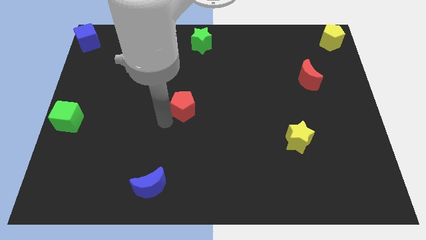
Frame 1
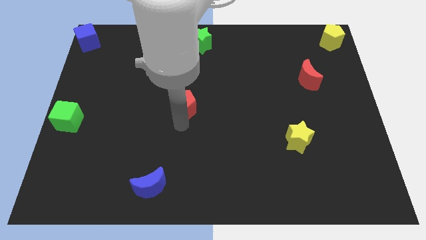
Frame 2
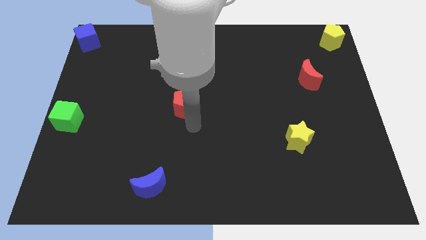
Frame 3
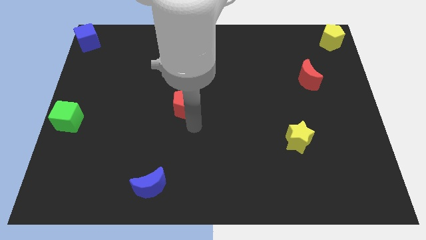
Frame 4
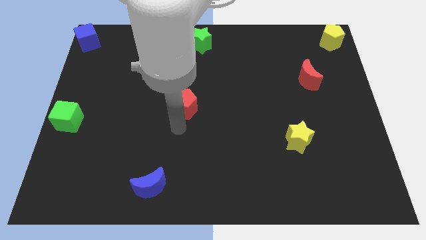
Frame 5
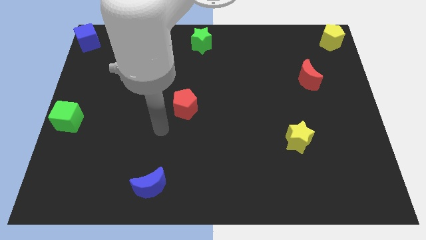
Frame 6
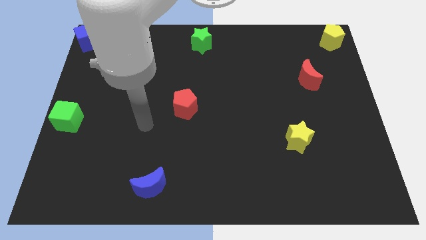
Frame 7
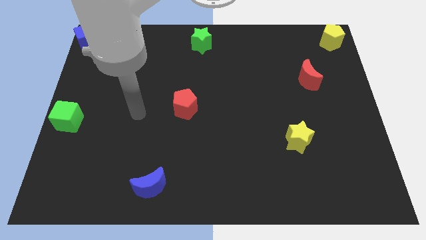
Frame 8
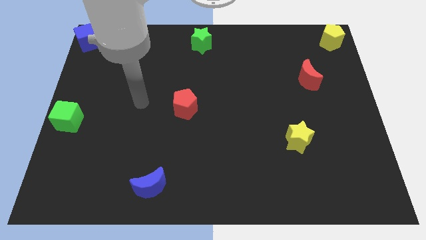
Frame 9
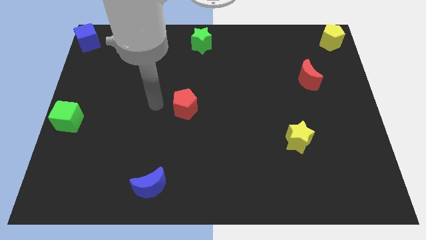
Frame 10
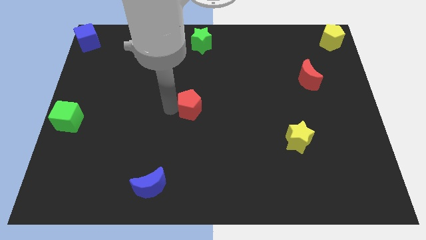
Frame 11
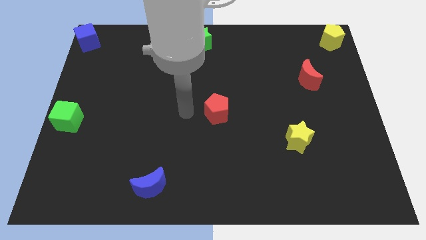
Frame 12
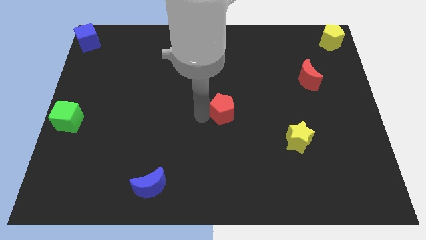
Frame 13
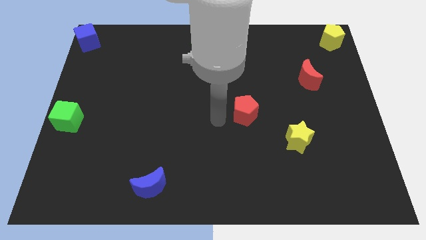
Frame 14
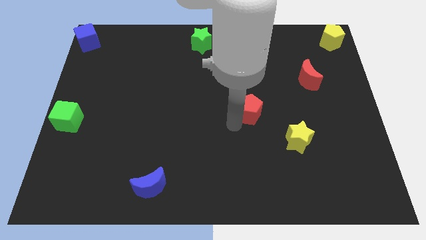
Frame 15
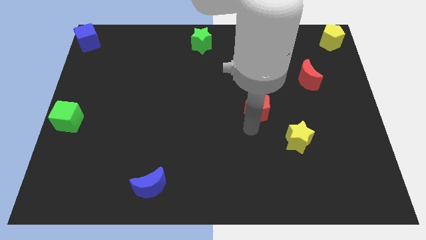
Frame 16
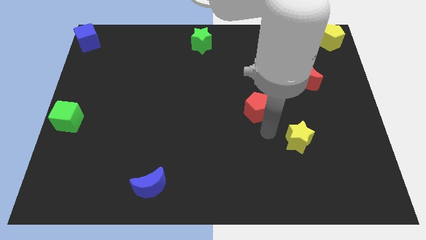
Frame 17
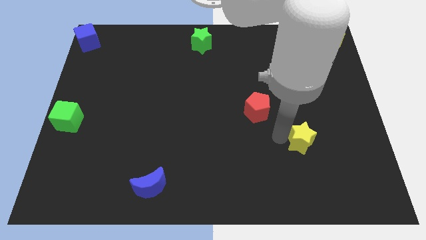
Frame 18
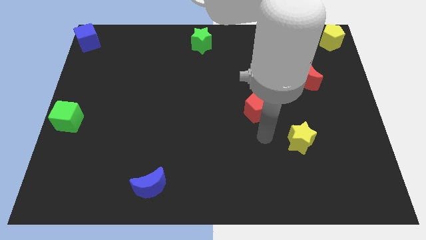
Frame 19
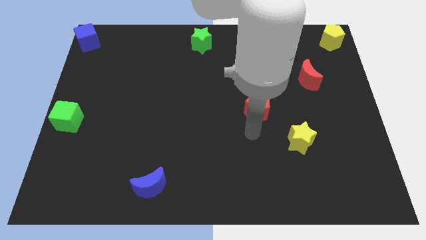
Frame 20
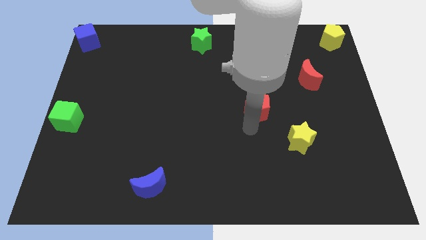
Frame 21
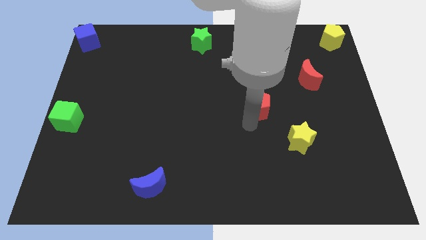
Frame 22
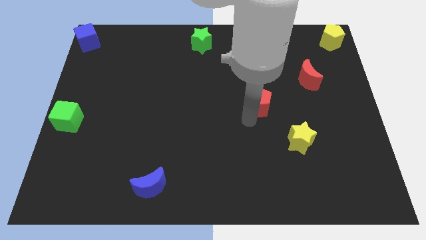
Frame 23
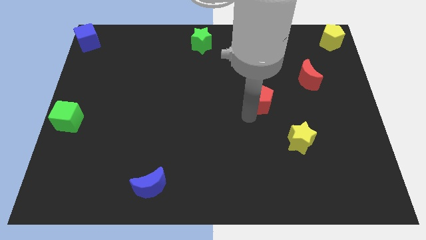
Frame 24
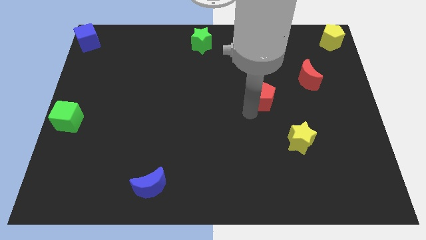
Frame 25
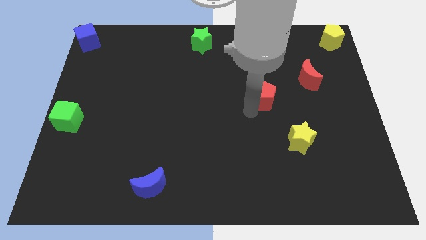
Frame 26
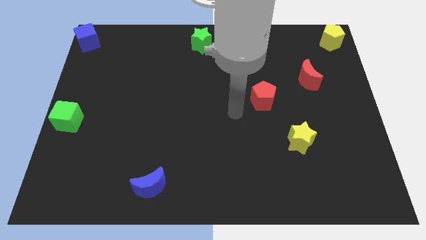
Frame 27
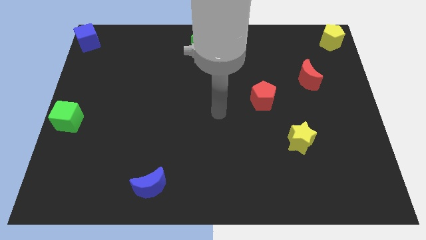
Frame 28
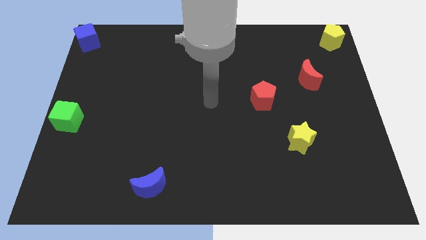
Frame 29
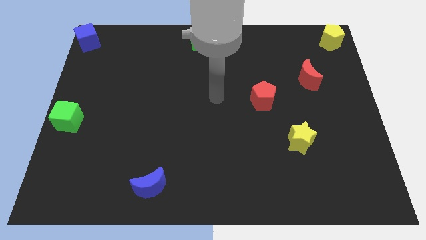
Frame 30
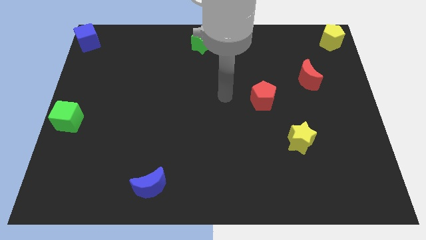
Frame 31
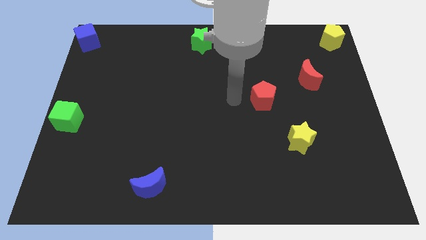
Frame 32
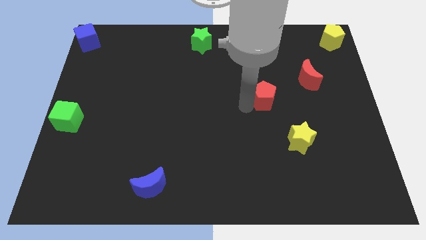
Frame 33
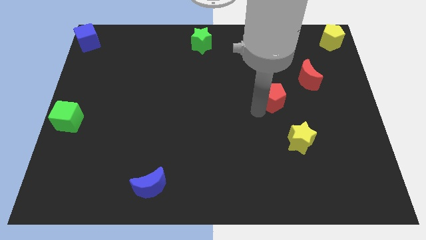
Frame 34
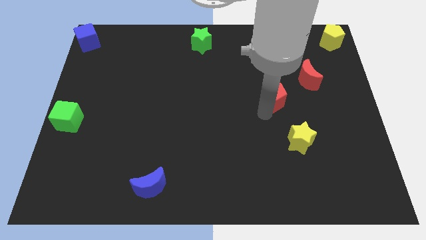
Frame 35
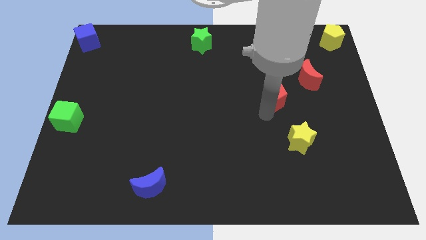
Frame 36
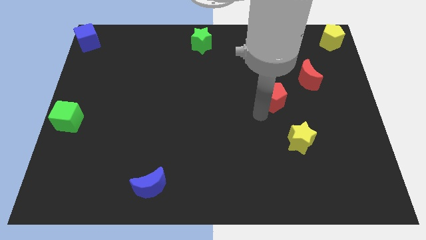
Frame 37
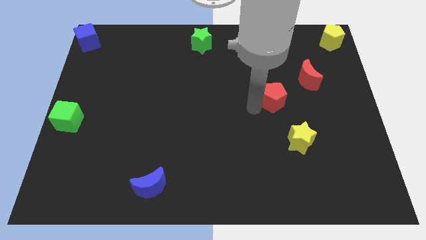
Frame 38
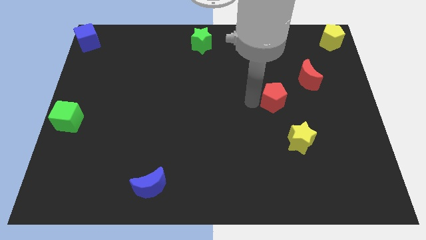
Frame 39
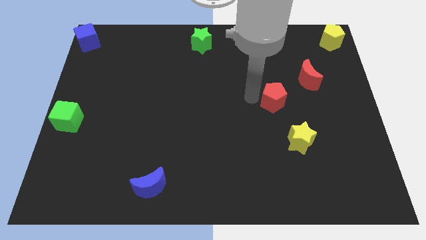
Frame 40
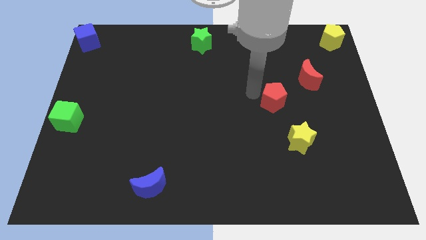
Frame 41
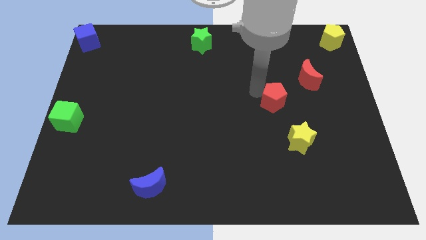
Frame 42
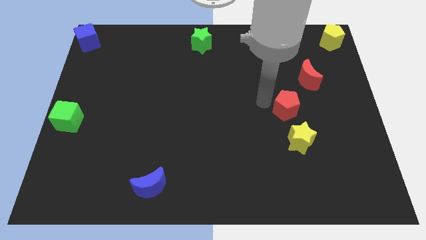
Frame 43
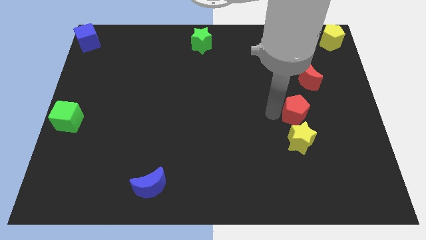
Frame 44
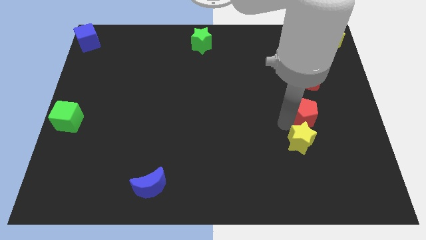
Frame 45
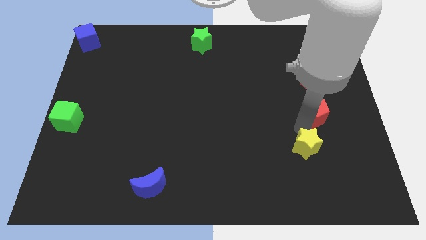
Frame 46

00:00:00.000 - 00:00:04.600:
drag the red pentagon between the yellow star and red moon

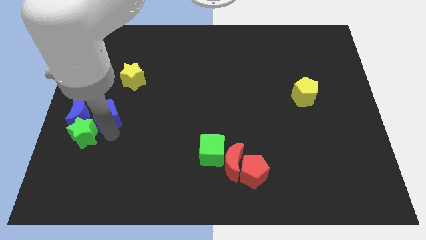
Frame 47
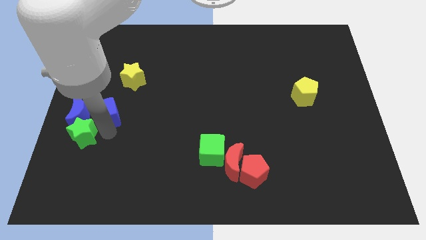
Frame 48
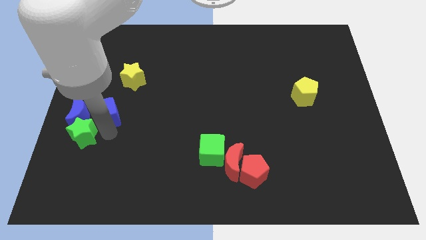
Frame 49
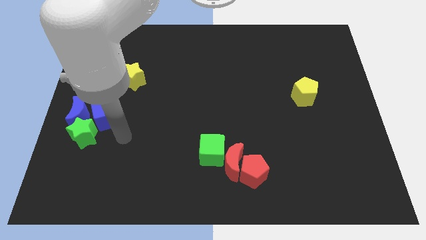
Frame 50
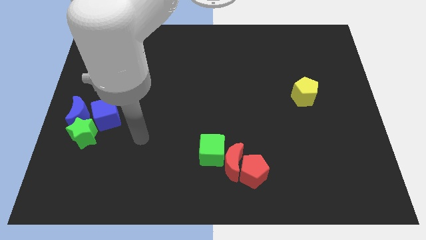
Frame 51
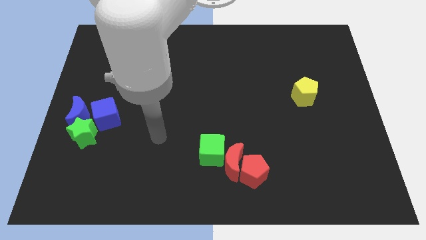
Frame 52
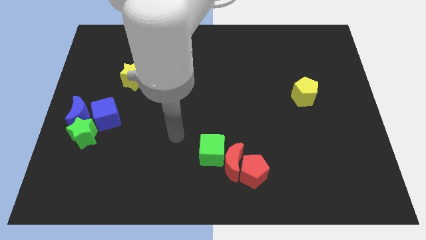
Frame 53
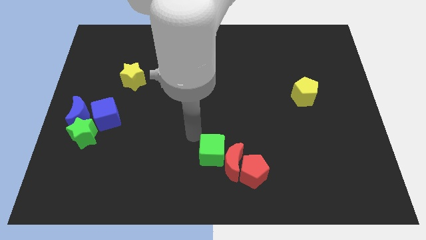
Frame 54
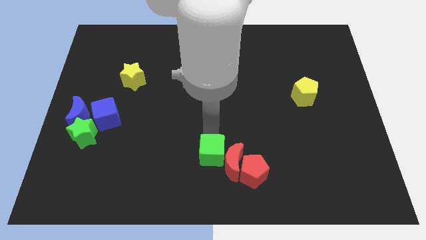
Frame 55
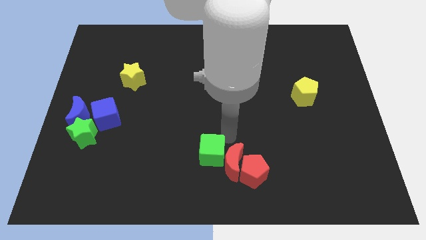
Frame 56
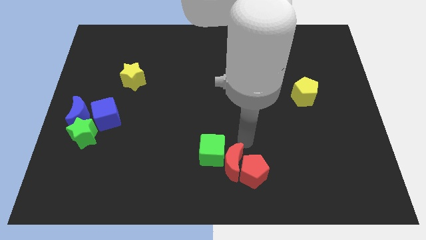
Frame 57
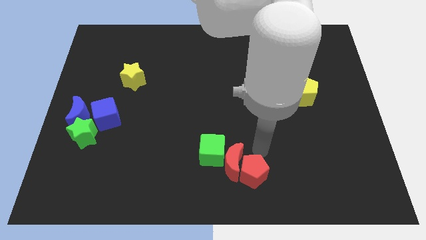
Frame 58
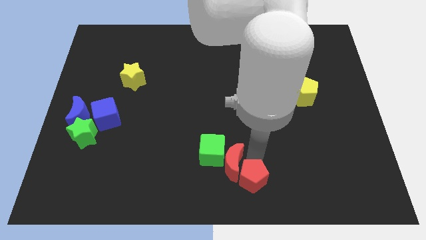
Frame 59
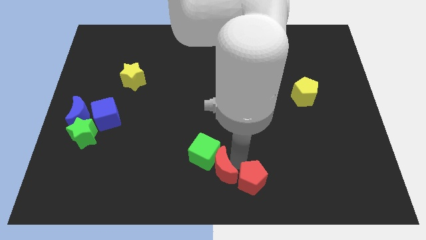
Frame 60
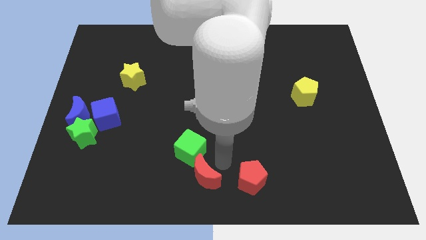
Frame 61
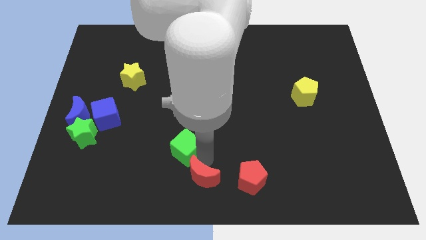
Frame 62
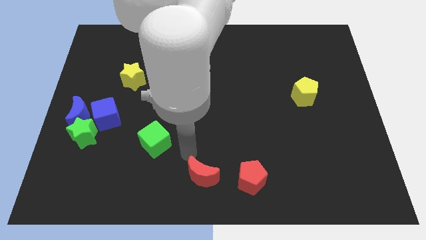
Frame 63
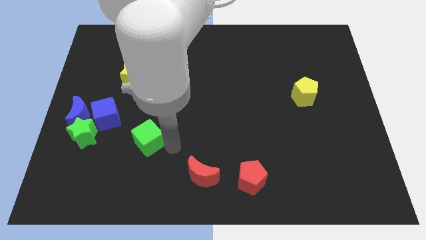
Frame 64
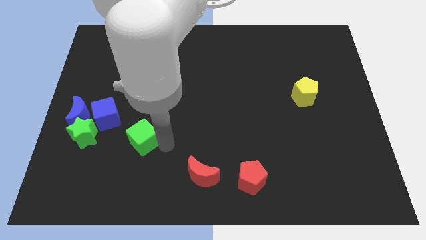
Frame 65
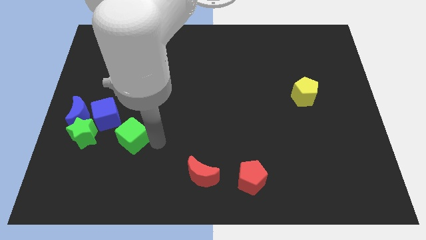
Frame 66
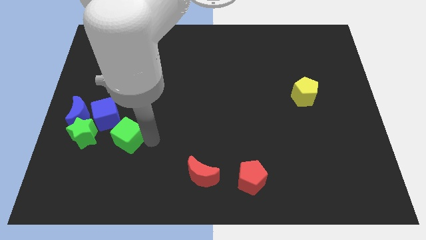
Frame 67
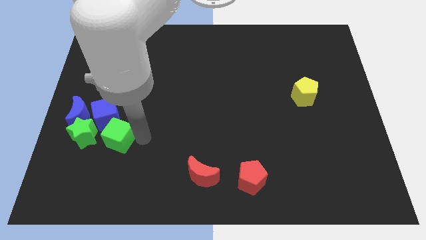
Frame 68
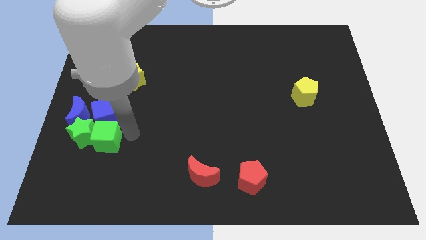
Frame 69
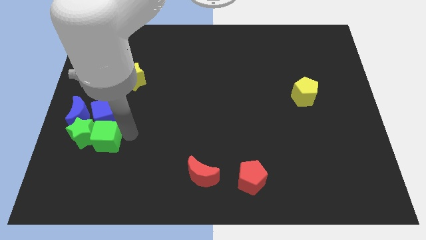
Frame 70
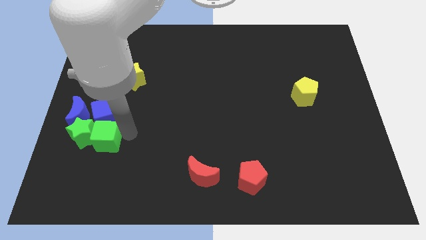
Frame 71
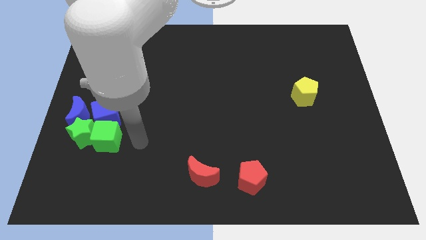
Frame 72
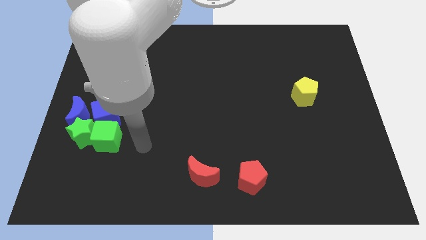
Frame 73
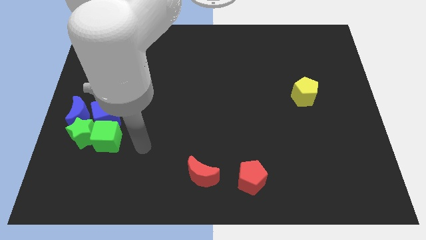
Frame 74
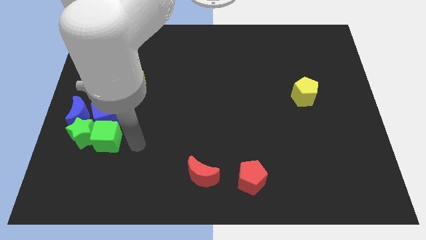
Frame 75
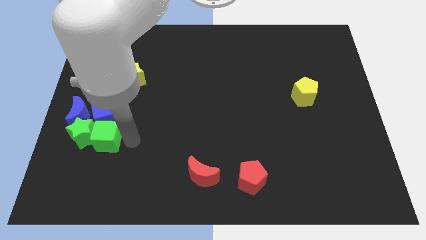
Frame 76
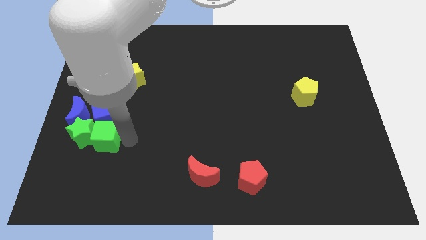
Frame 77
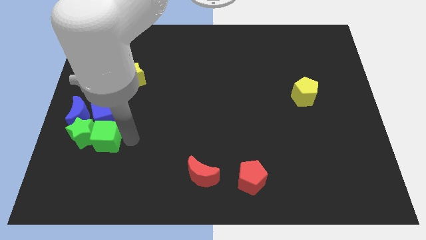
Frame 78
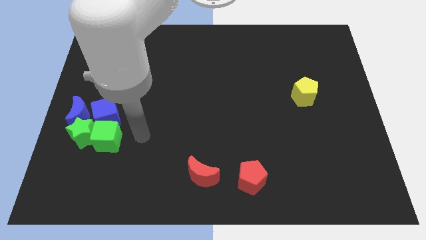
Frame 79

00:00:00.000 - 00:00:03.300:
place the green cube to the right of the green star

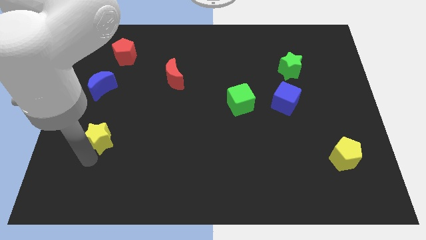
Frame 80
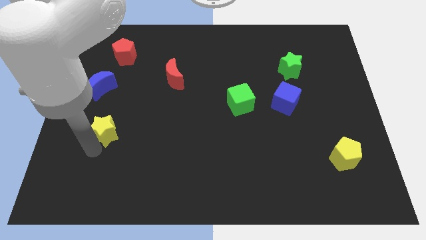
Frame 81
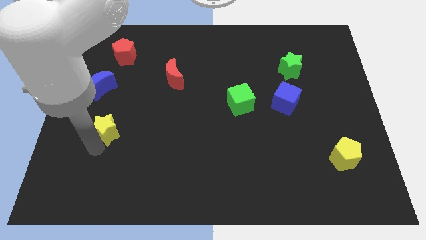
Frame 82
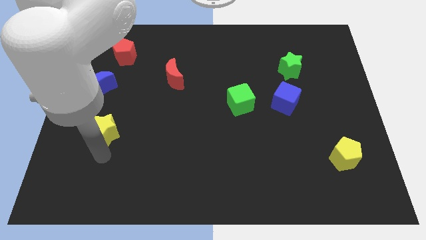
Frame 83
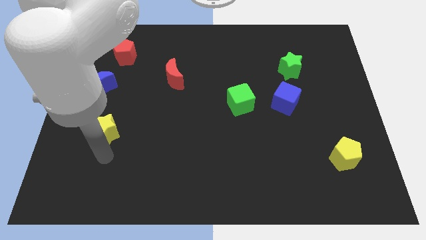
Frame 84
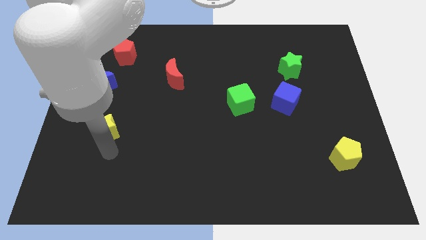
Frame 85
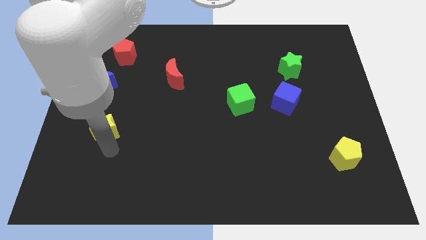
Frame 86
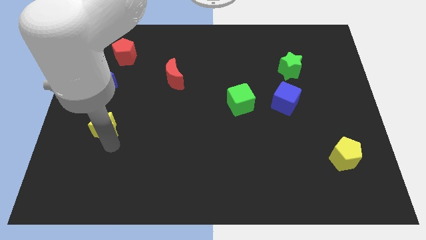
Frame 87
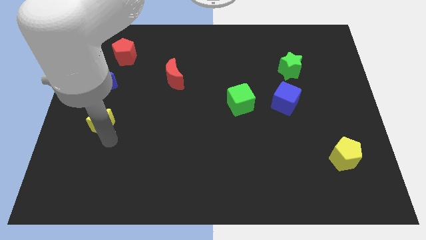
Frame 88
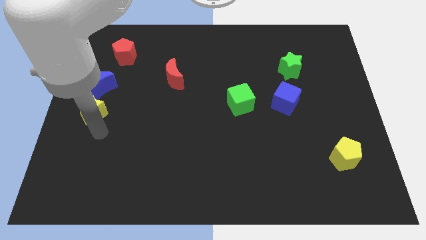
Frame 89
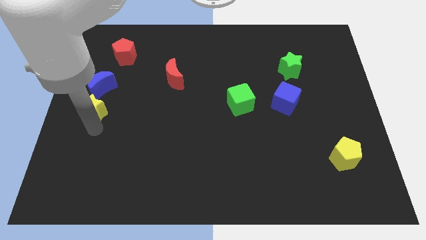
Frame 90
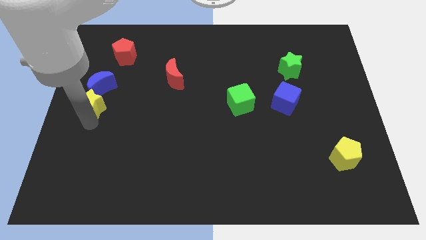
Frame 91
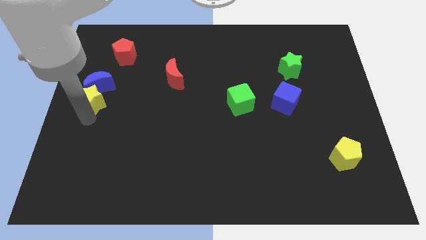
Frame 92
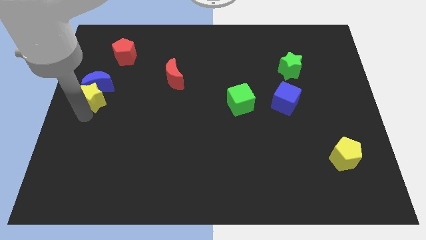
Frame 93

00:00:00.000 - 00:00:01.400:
push the yellow star into the blue moon
